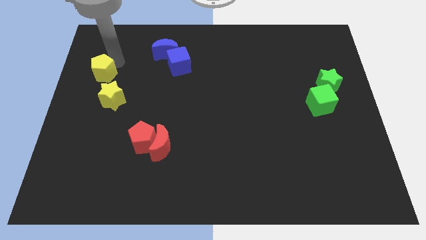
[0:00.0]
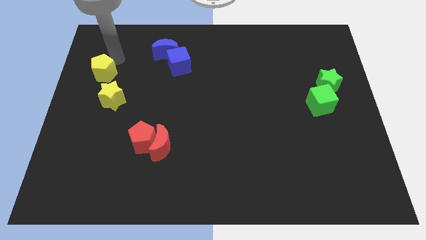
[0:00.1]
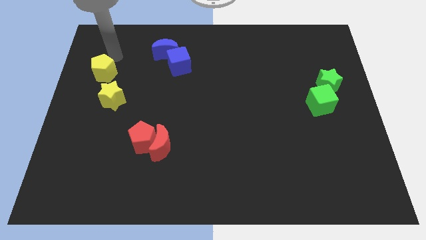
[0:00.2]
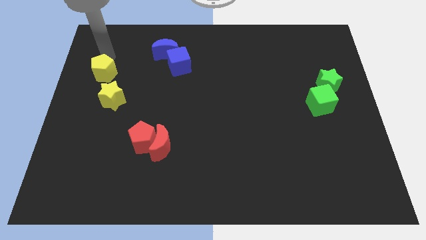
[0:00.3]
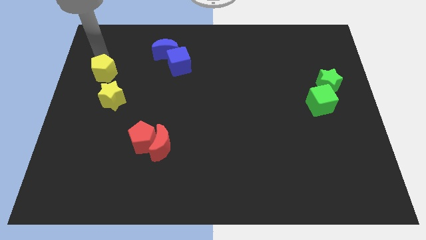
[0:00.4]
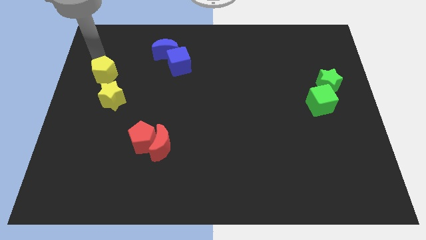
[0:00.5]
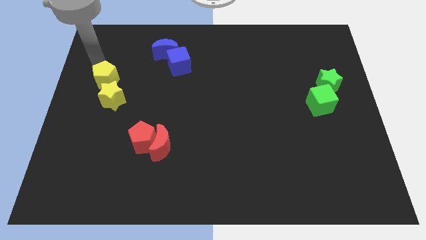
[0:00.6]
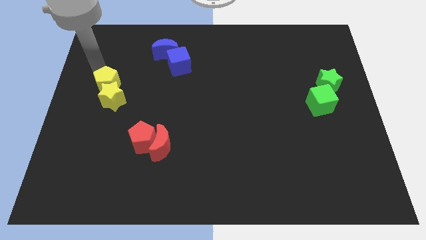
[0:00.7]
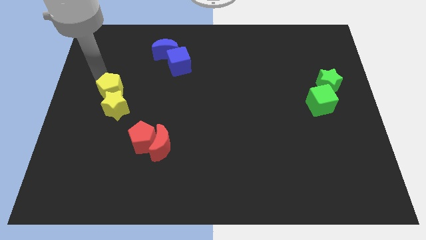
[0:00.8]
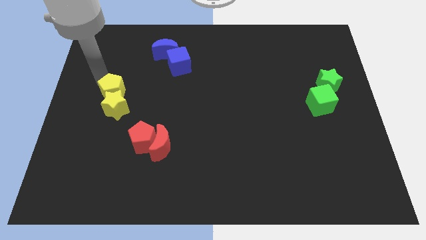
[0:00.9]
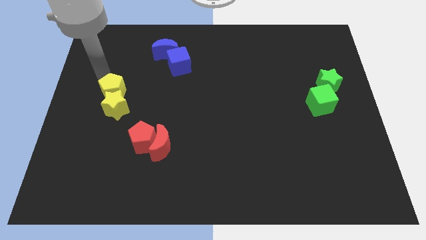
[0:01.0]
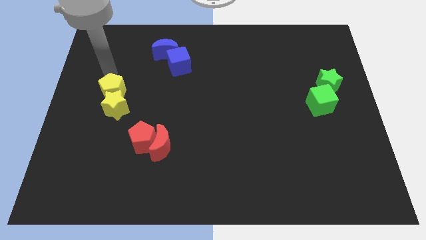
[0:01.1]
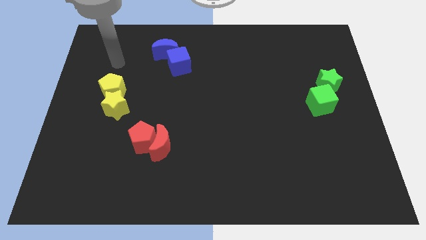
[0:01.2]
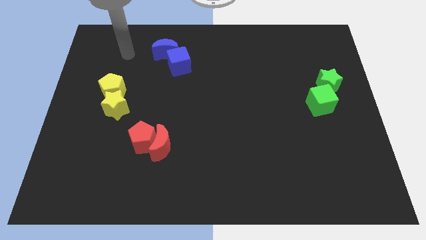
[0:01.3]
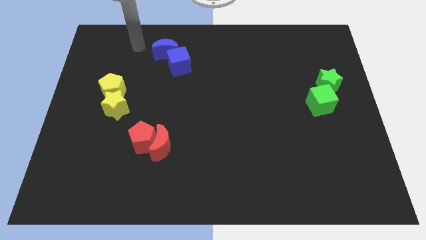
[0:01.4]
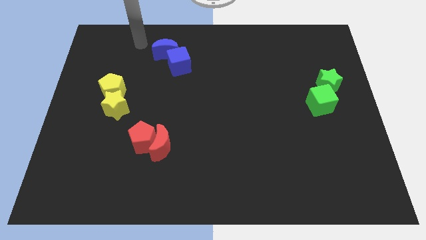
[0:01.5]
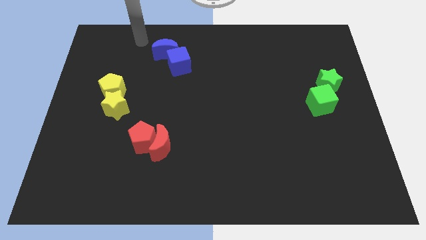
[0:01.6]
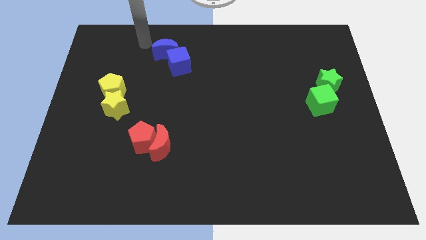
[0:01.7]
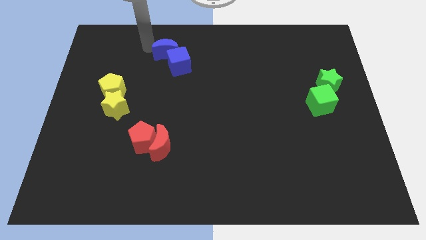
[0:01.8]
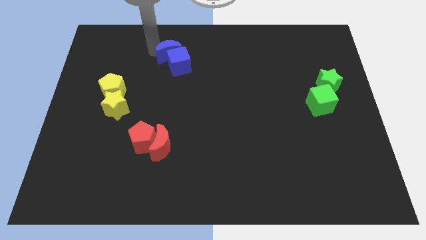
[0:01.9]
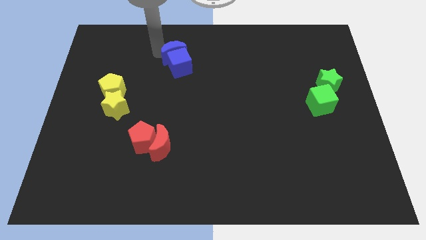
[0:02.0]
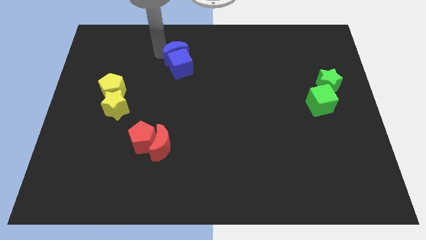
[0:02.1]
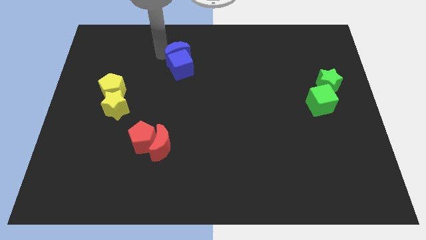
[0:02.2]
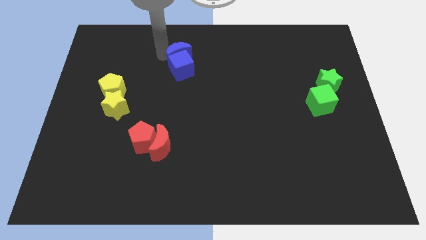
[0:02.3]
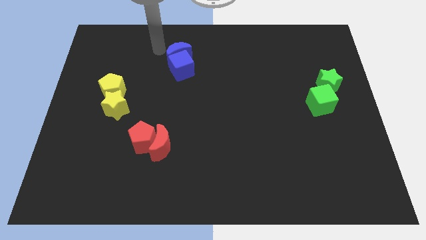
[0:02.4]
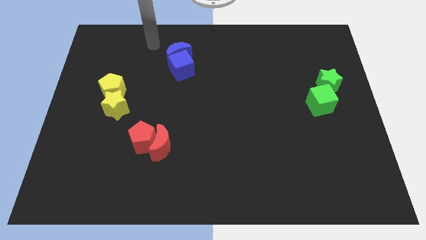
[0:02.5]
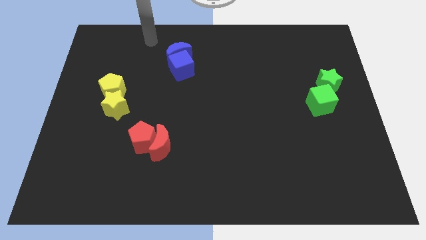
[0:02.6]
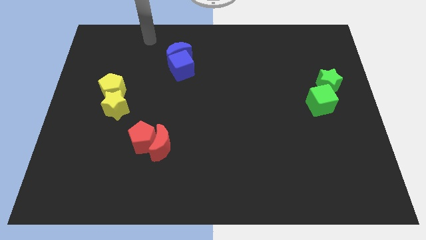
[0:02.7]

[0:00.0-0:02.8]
move the blue moon above the blue cube

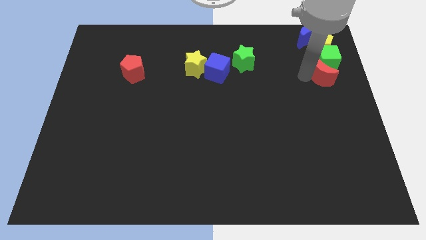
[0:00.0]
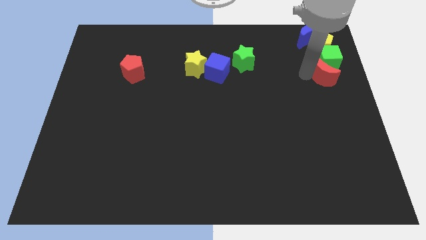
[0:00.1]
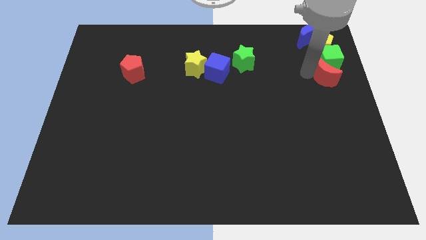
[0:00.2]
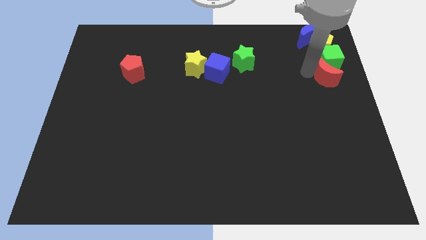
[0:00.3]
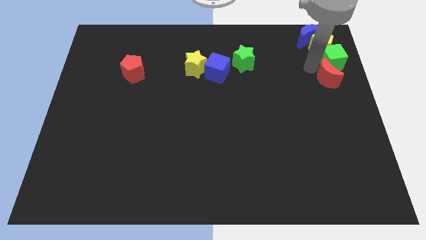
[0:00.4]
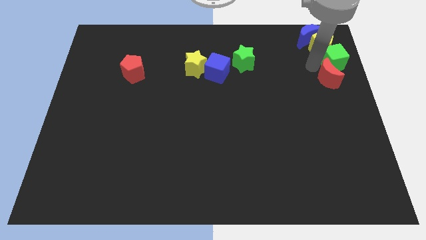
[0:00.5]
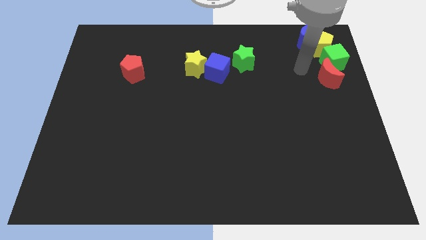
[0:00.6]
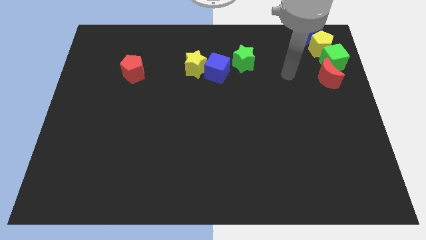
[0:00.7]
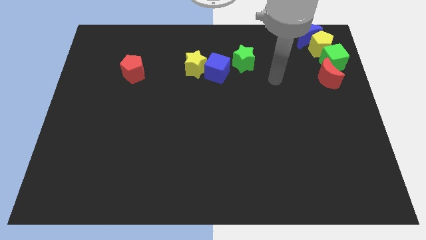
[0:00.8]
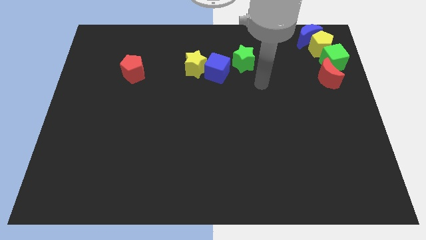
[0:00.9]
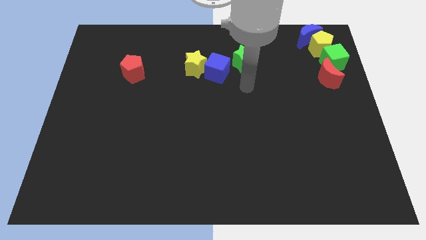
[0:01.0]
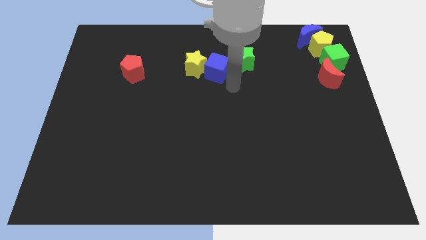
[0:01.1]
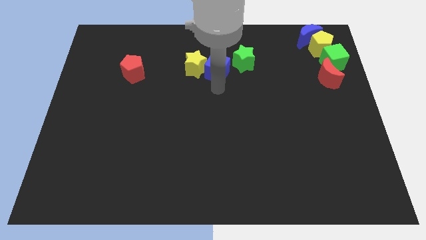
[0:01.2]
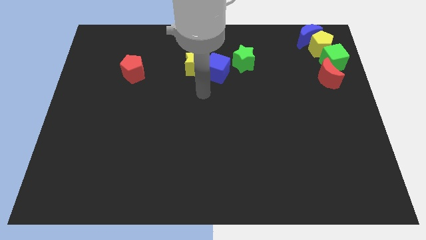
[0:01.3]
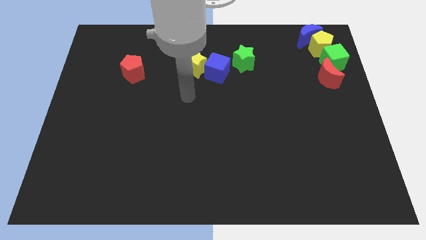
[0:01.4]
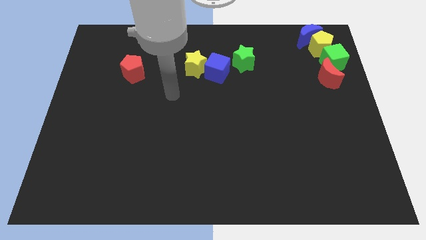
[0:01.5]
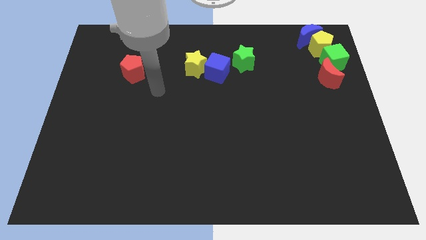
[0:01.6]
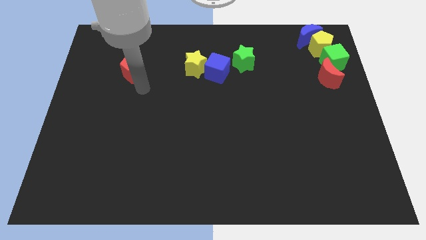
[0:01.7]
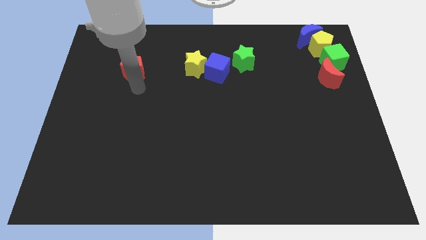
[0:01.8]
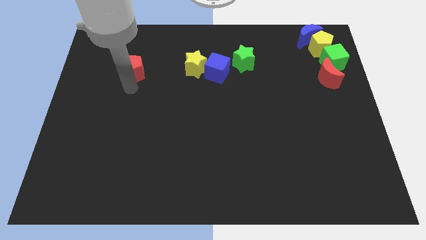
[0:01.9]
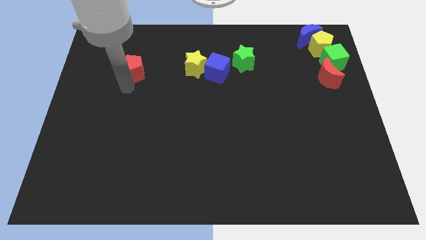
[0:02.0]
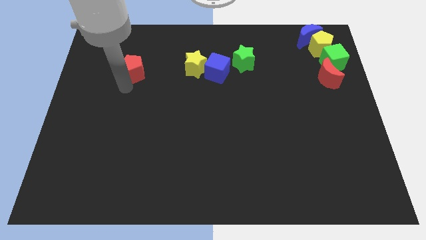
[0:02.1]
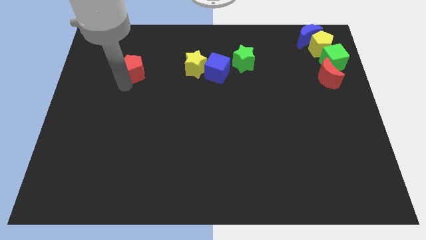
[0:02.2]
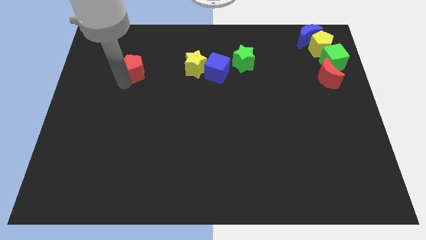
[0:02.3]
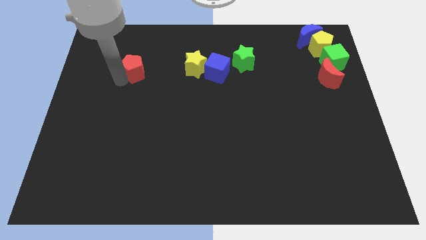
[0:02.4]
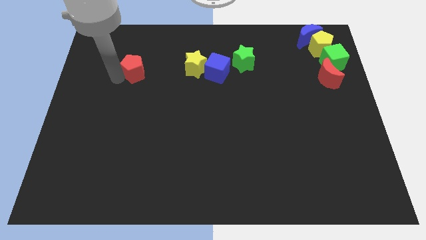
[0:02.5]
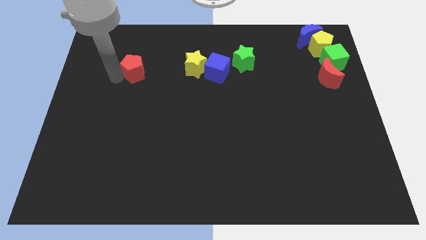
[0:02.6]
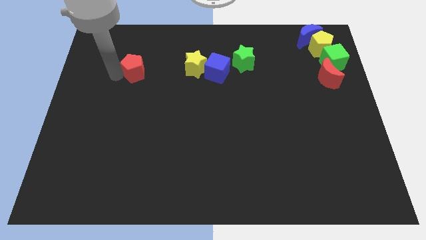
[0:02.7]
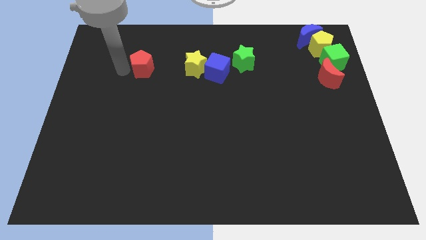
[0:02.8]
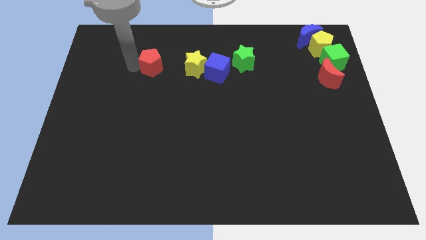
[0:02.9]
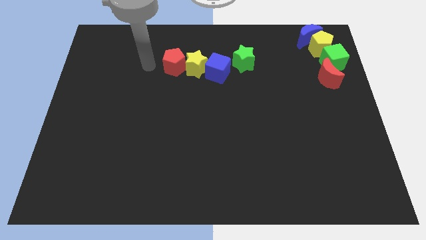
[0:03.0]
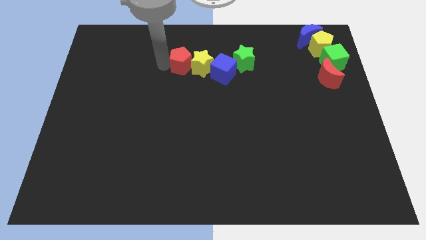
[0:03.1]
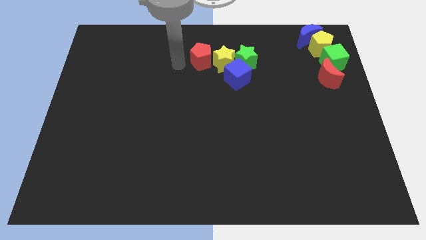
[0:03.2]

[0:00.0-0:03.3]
push red pentagon left to the yellow star

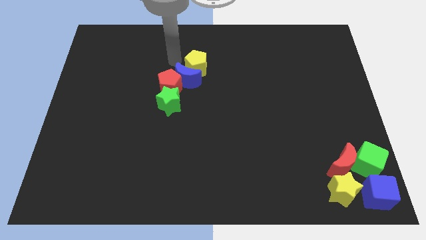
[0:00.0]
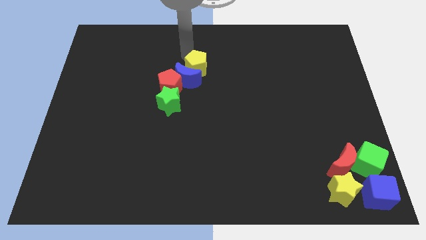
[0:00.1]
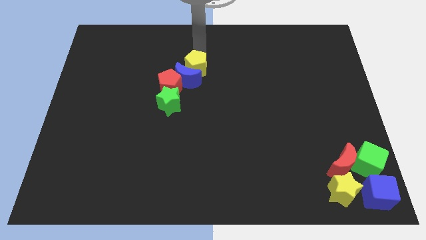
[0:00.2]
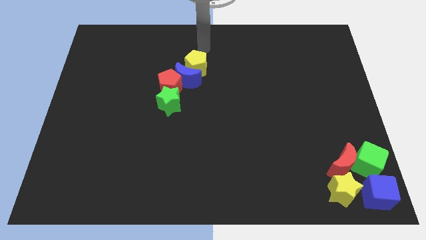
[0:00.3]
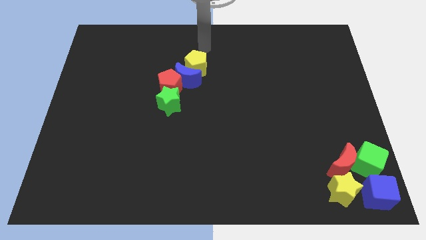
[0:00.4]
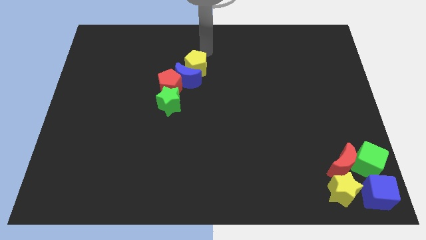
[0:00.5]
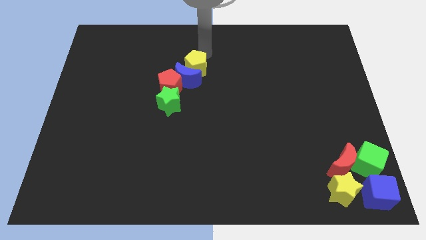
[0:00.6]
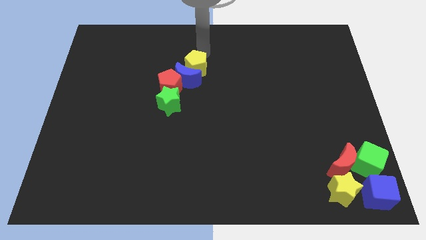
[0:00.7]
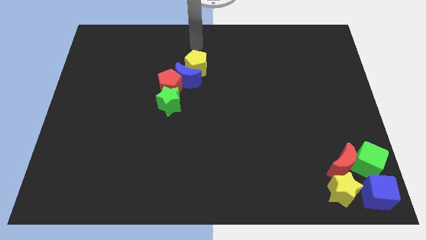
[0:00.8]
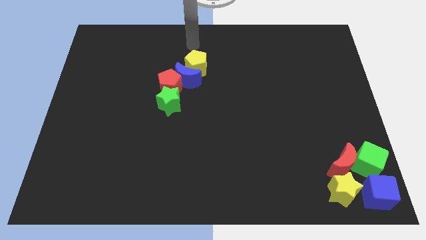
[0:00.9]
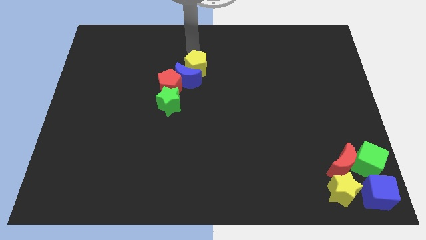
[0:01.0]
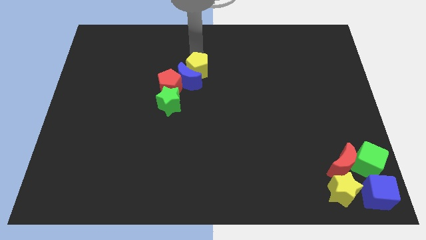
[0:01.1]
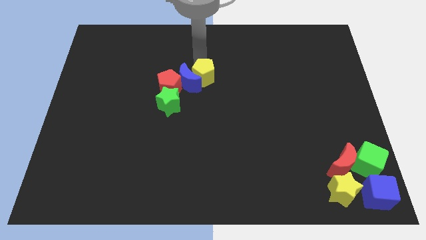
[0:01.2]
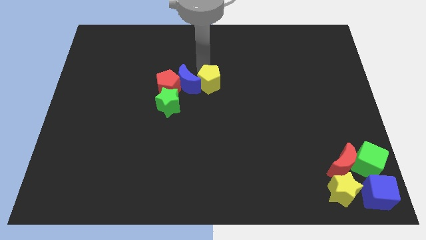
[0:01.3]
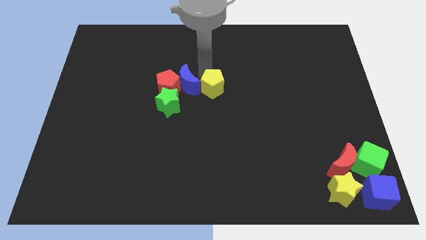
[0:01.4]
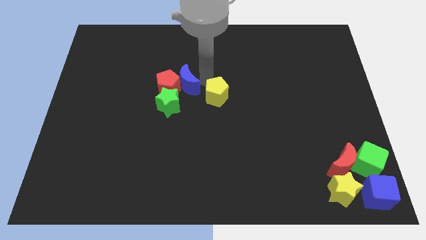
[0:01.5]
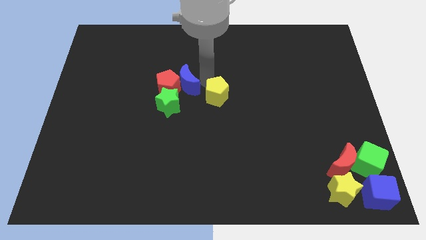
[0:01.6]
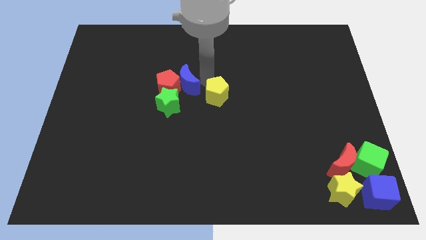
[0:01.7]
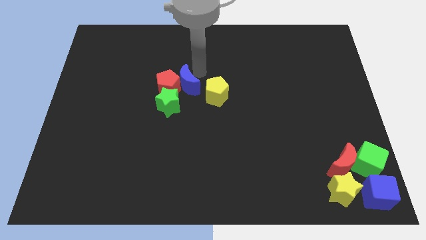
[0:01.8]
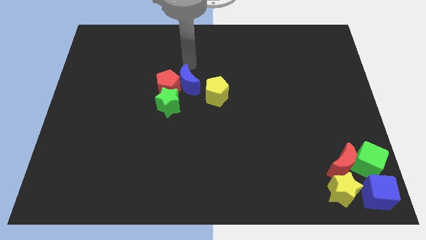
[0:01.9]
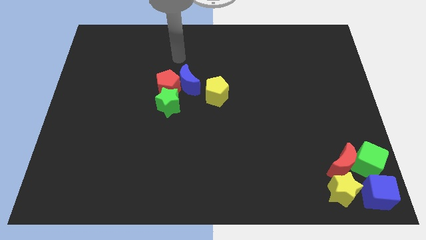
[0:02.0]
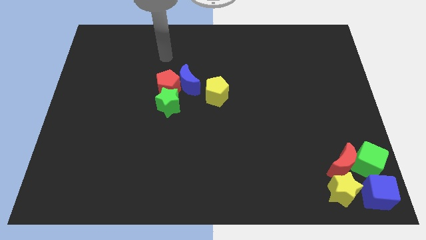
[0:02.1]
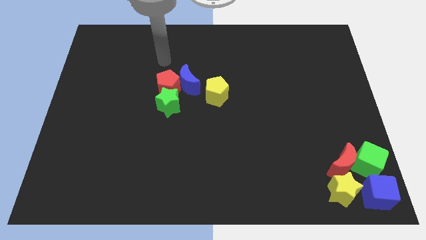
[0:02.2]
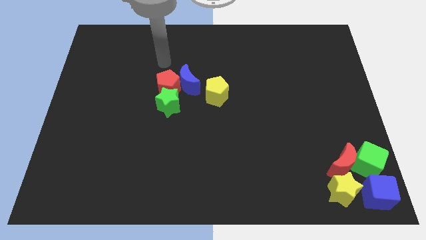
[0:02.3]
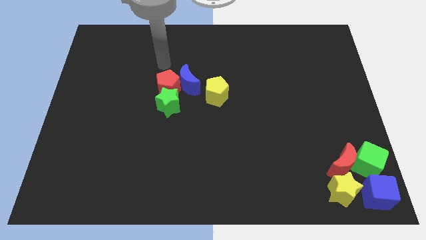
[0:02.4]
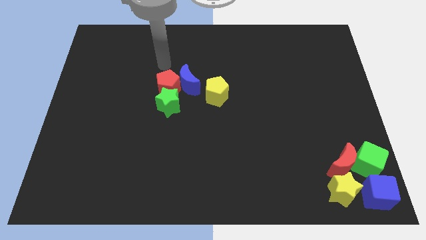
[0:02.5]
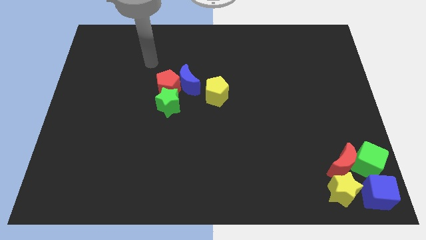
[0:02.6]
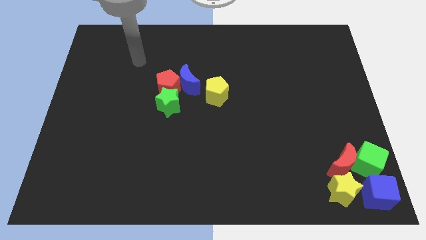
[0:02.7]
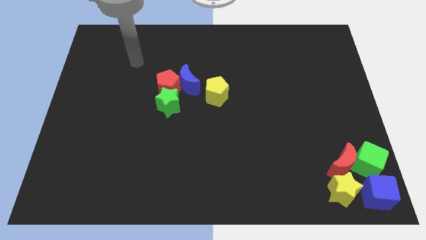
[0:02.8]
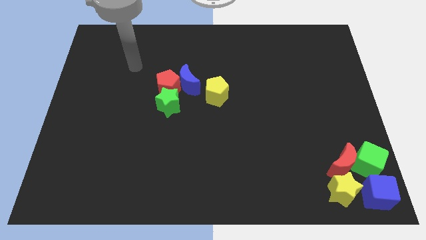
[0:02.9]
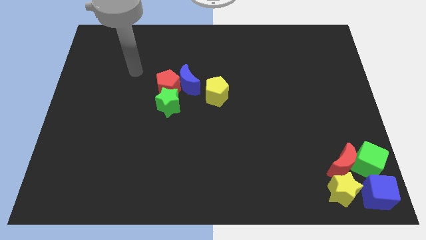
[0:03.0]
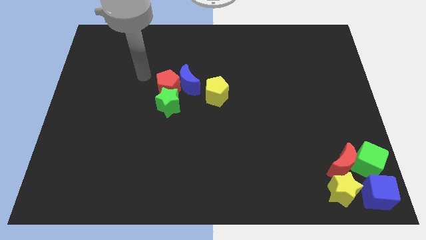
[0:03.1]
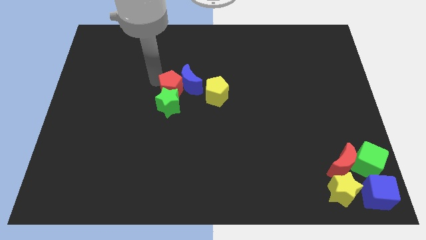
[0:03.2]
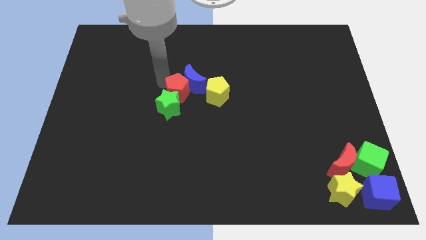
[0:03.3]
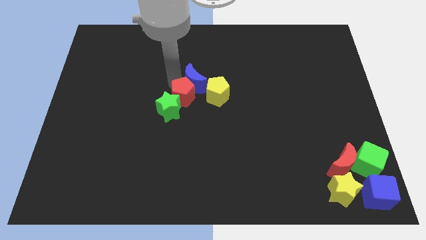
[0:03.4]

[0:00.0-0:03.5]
slide the yellow pentagon and the red pentagon towards the center of the board
